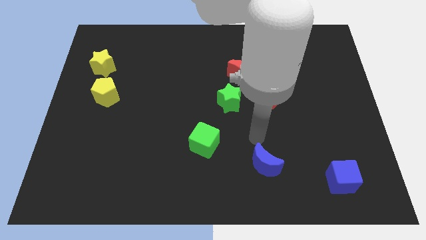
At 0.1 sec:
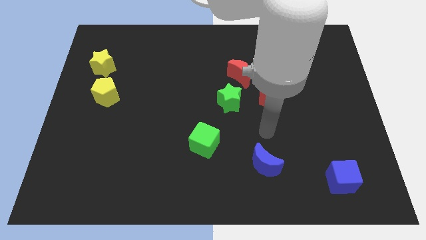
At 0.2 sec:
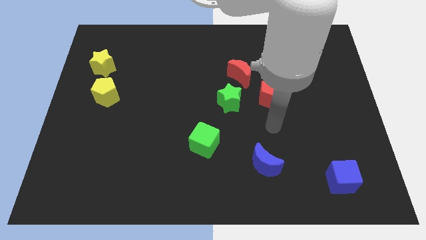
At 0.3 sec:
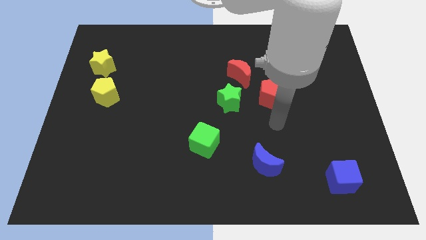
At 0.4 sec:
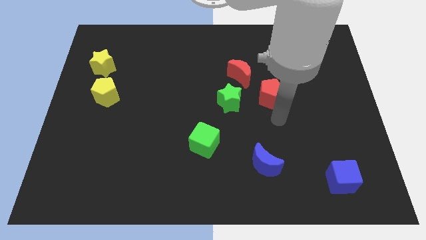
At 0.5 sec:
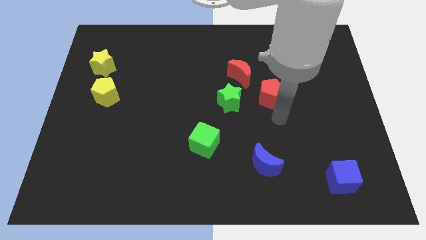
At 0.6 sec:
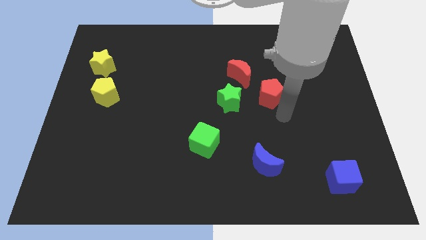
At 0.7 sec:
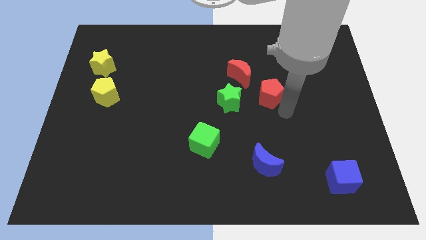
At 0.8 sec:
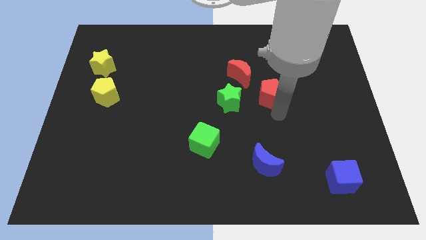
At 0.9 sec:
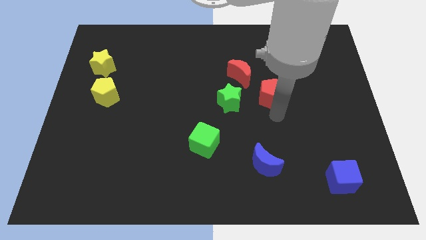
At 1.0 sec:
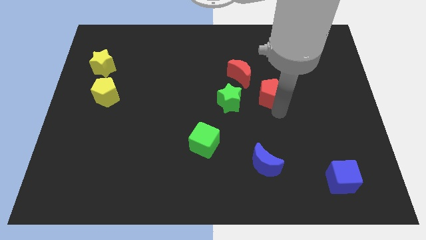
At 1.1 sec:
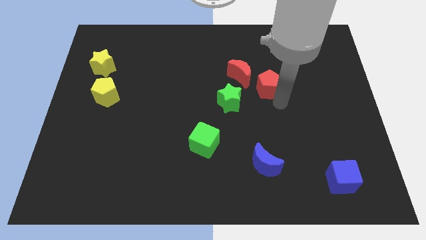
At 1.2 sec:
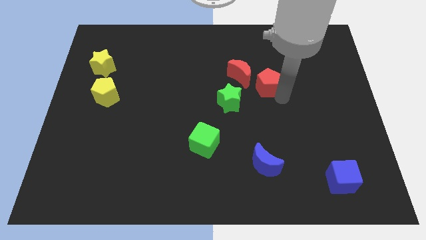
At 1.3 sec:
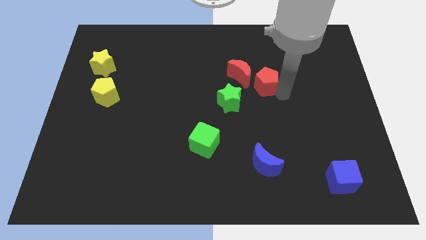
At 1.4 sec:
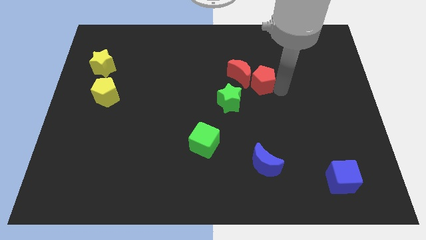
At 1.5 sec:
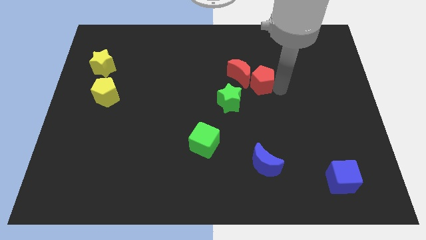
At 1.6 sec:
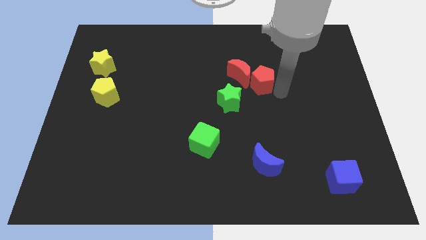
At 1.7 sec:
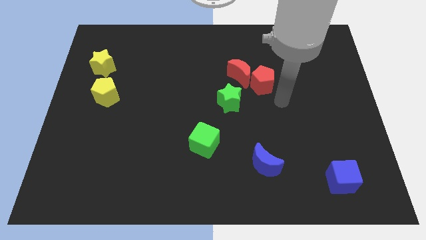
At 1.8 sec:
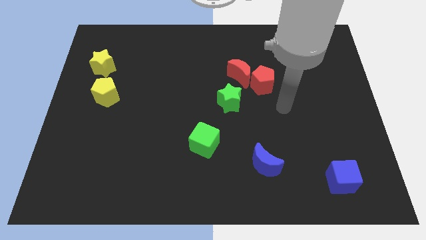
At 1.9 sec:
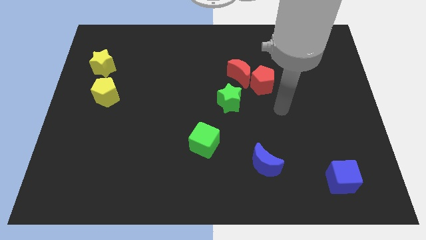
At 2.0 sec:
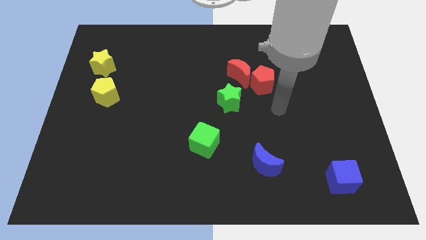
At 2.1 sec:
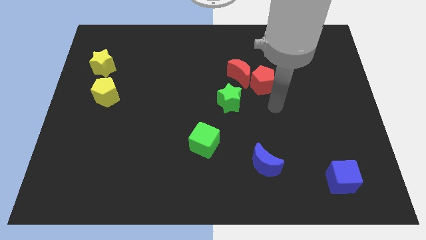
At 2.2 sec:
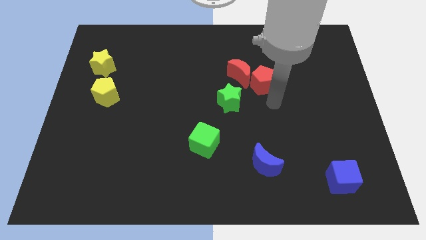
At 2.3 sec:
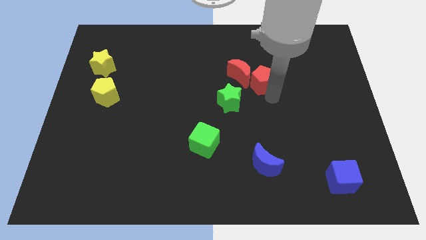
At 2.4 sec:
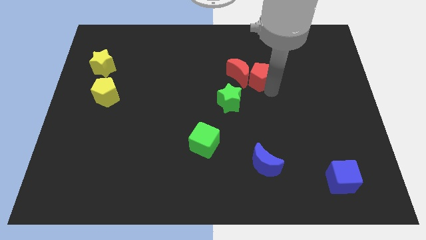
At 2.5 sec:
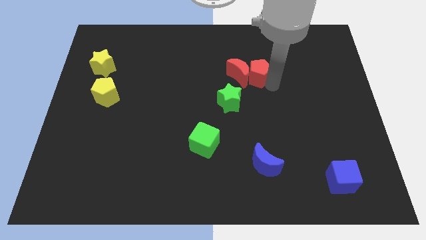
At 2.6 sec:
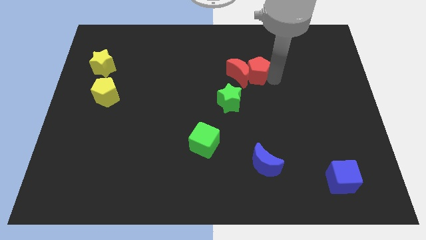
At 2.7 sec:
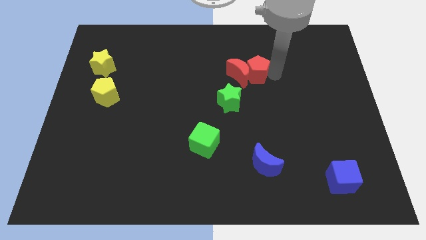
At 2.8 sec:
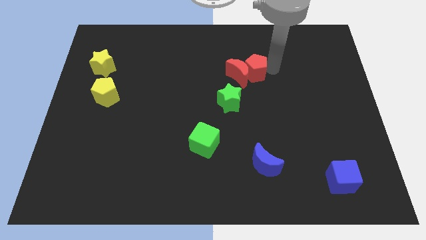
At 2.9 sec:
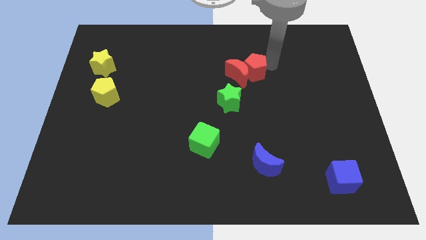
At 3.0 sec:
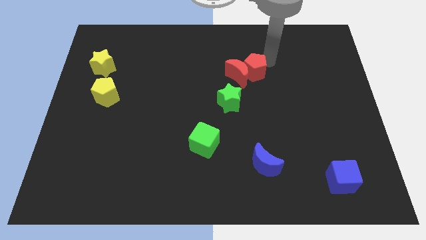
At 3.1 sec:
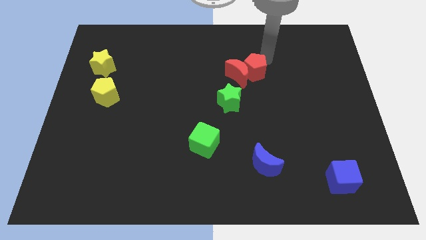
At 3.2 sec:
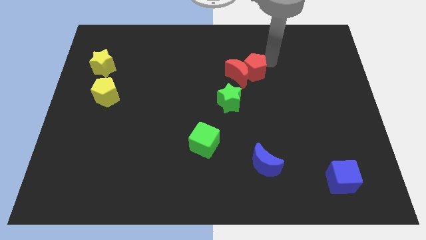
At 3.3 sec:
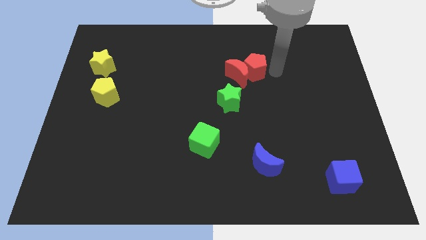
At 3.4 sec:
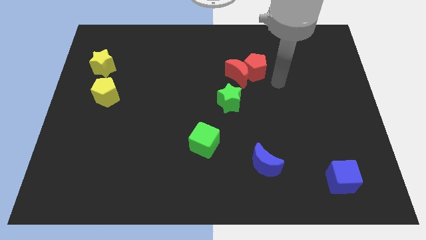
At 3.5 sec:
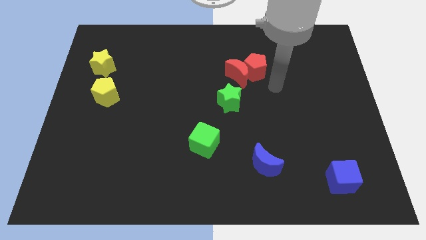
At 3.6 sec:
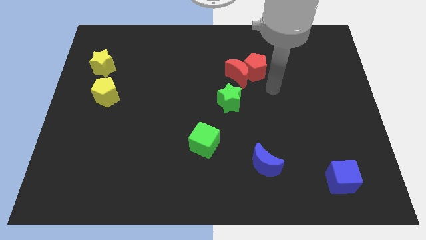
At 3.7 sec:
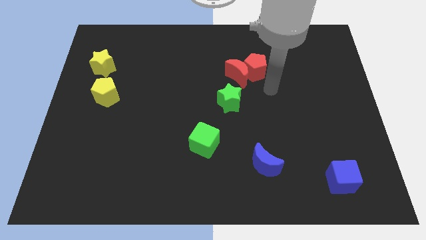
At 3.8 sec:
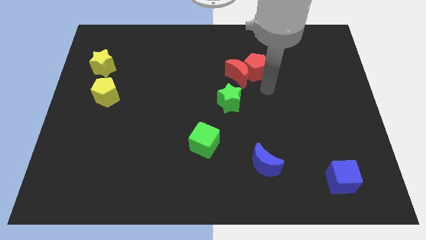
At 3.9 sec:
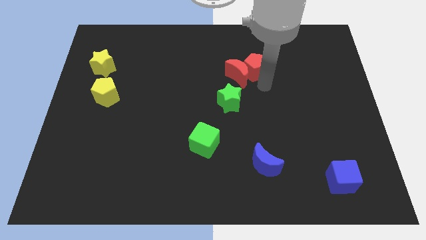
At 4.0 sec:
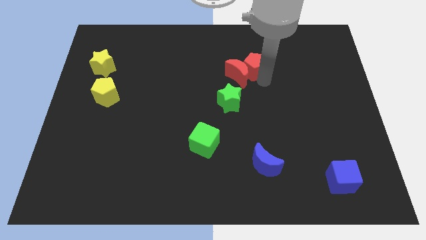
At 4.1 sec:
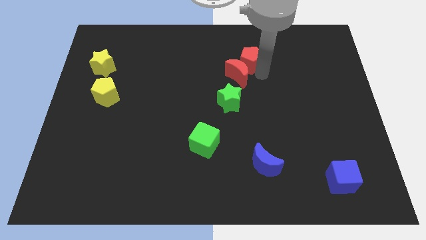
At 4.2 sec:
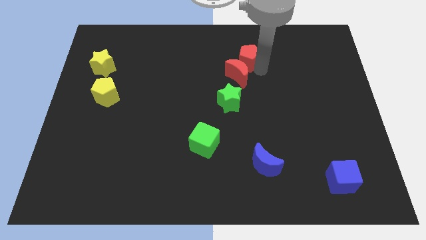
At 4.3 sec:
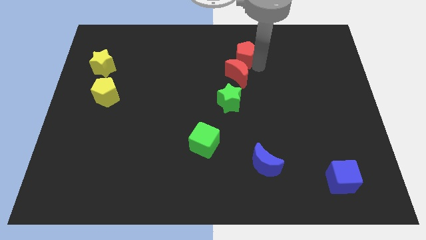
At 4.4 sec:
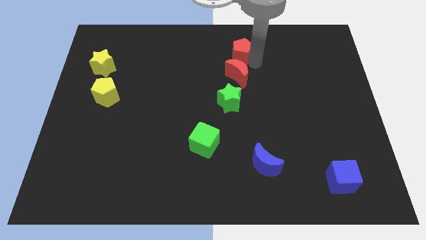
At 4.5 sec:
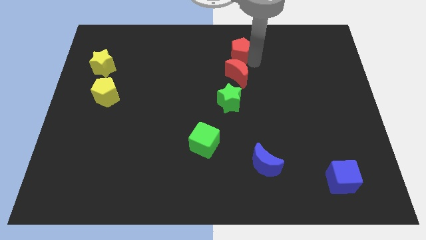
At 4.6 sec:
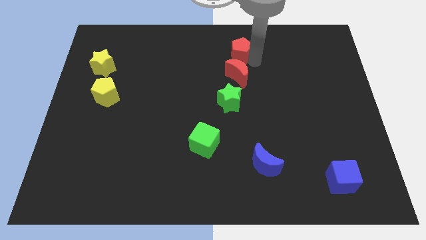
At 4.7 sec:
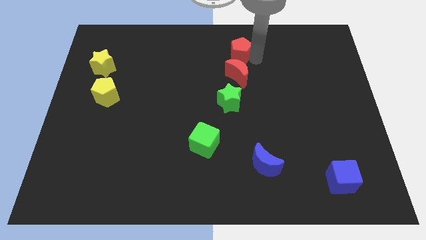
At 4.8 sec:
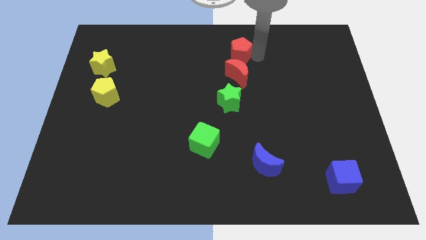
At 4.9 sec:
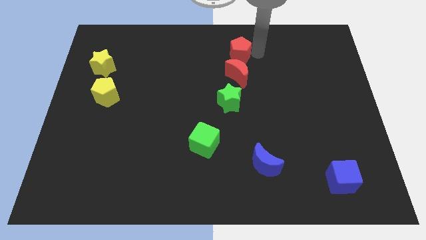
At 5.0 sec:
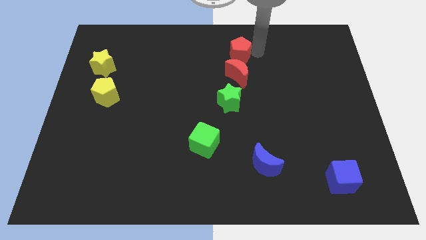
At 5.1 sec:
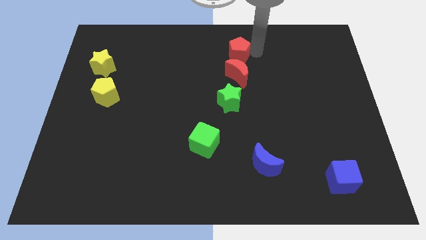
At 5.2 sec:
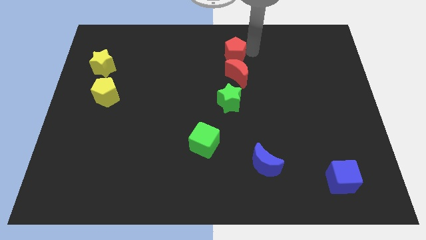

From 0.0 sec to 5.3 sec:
move the red pentagon to the top of the red crescent

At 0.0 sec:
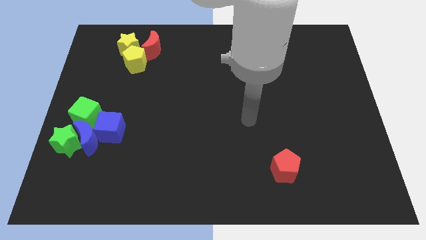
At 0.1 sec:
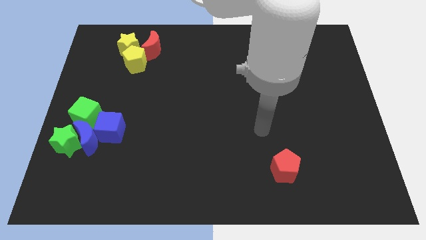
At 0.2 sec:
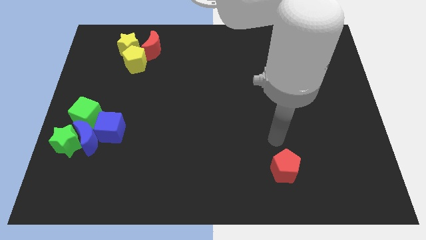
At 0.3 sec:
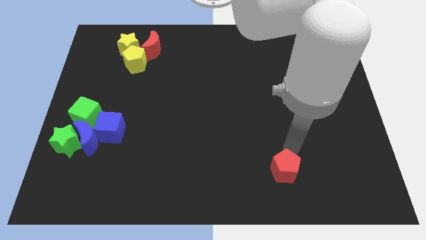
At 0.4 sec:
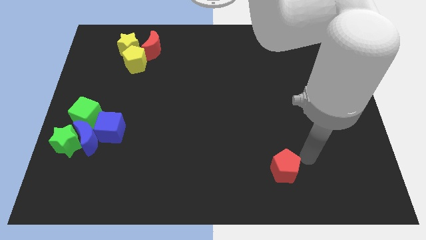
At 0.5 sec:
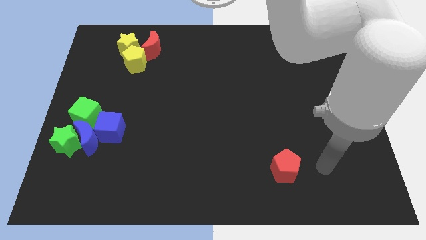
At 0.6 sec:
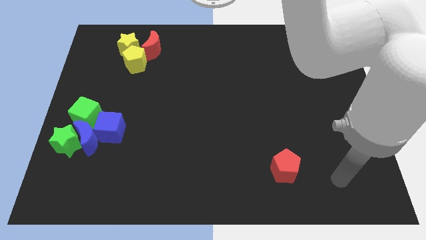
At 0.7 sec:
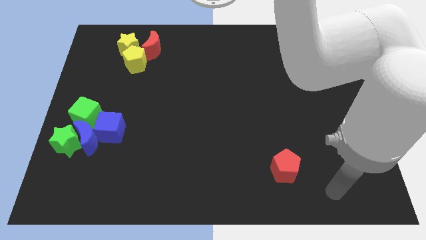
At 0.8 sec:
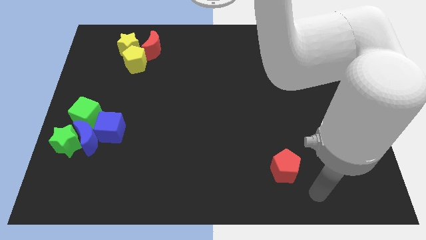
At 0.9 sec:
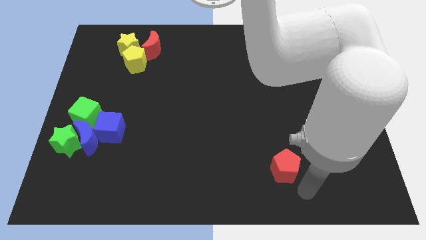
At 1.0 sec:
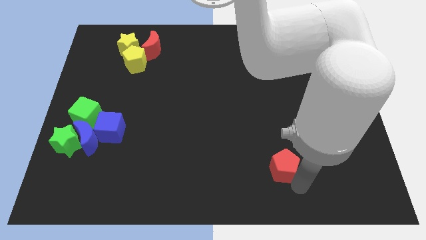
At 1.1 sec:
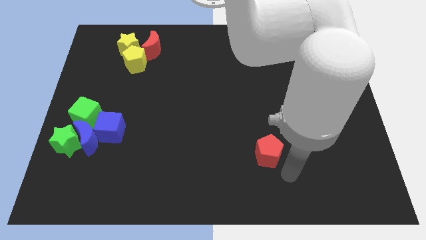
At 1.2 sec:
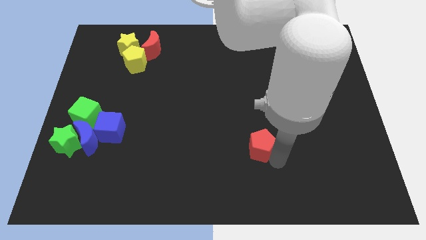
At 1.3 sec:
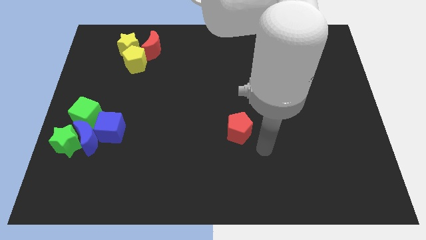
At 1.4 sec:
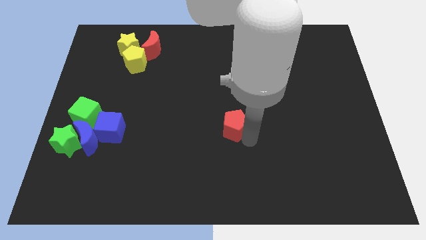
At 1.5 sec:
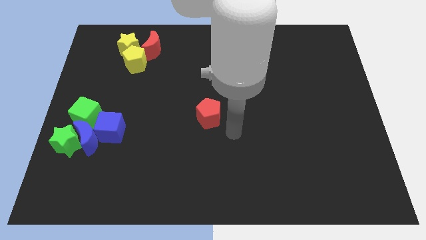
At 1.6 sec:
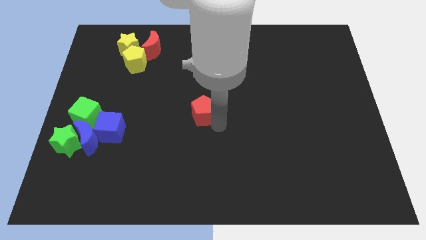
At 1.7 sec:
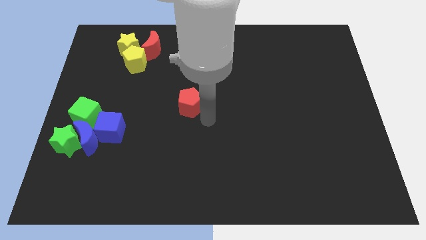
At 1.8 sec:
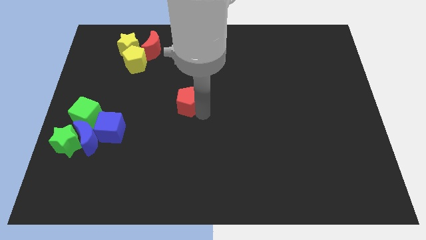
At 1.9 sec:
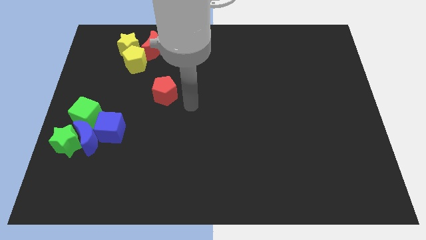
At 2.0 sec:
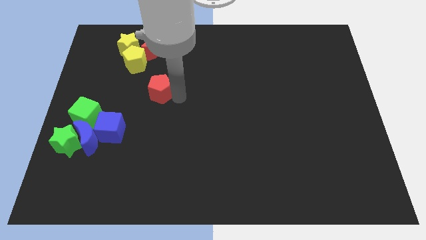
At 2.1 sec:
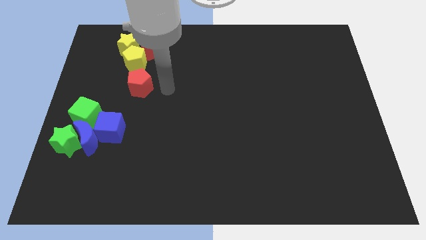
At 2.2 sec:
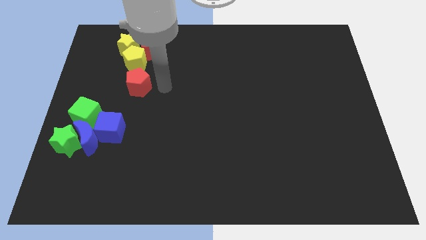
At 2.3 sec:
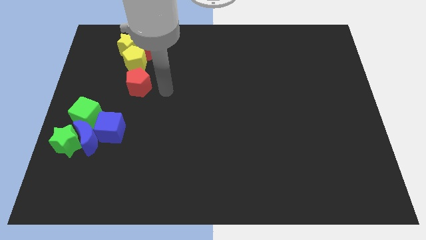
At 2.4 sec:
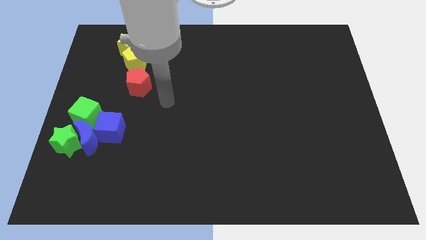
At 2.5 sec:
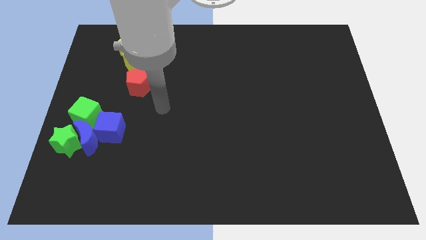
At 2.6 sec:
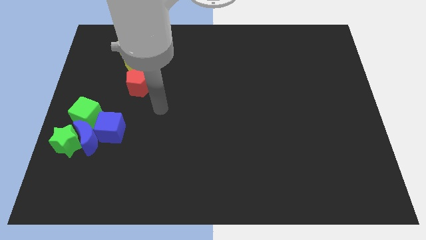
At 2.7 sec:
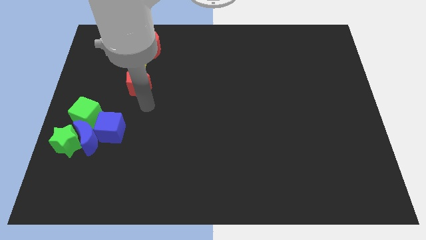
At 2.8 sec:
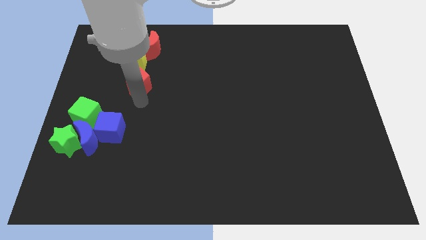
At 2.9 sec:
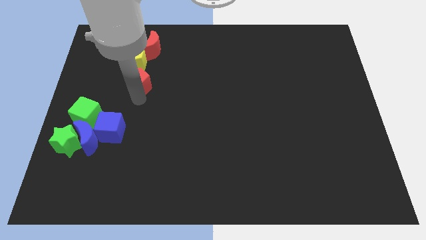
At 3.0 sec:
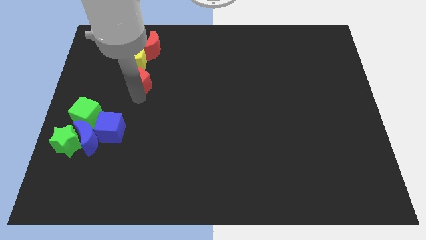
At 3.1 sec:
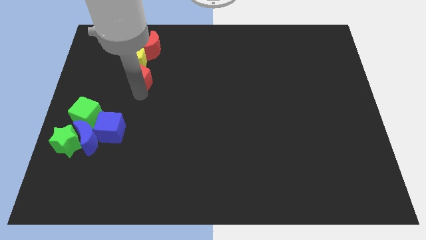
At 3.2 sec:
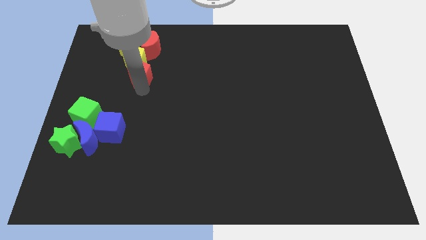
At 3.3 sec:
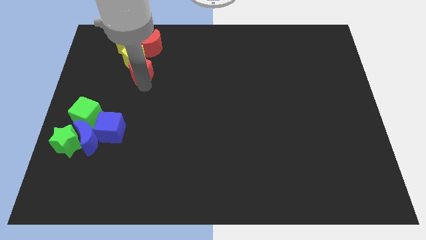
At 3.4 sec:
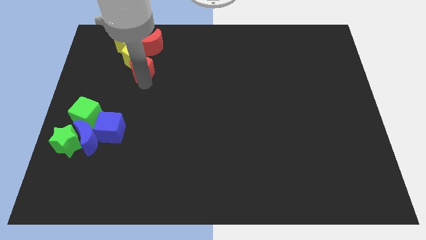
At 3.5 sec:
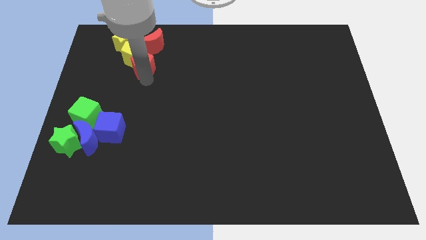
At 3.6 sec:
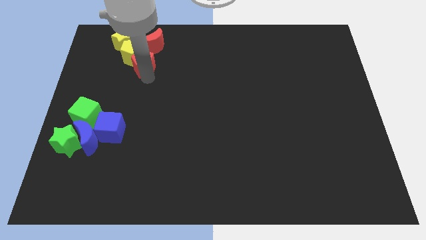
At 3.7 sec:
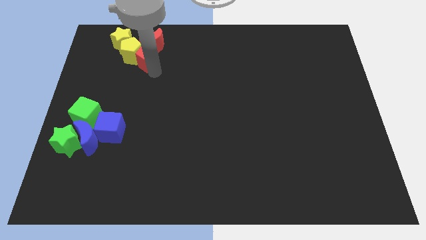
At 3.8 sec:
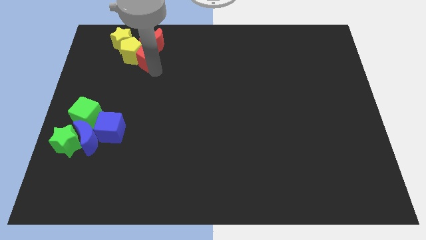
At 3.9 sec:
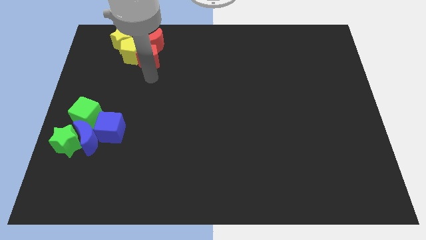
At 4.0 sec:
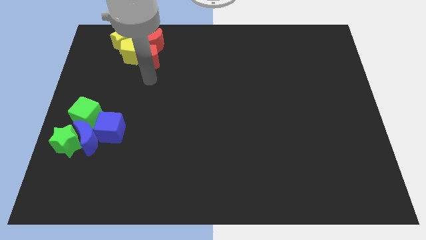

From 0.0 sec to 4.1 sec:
move the red pentagon towards the red moon
